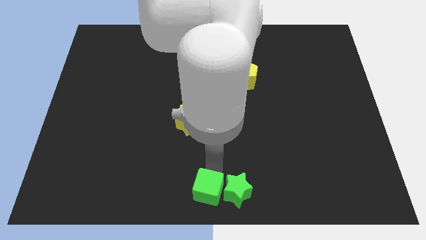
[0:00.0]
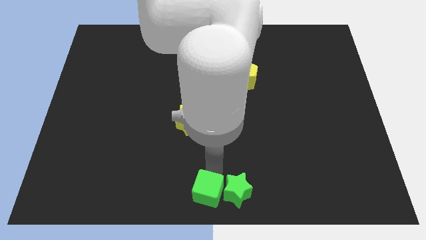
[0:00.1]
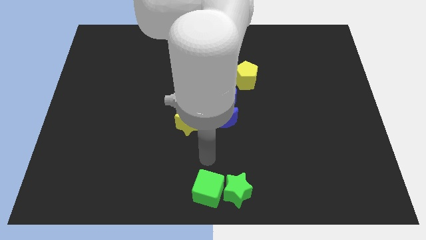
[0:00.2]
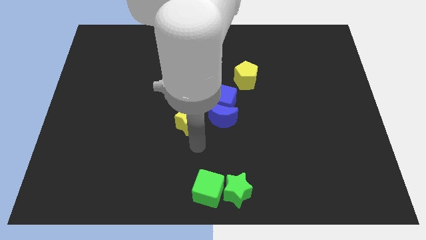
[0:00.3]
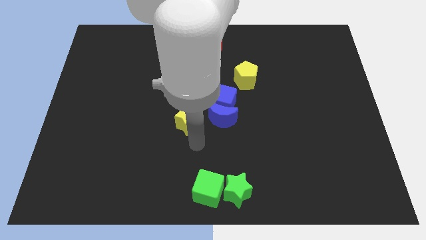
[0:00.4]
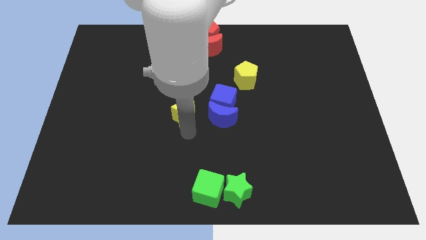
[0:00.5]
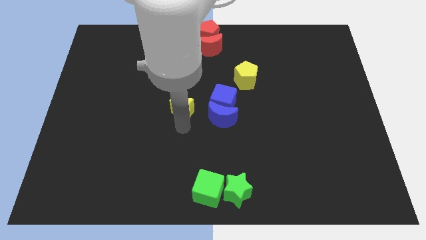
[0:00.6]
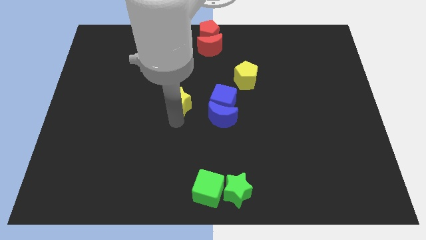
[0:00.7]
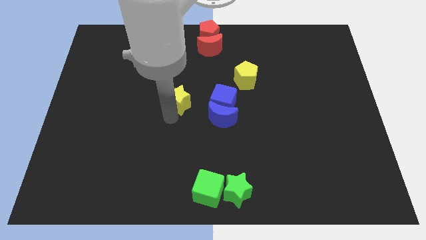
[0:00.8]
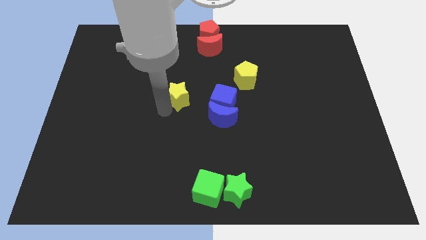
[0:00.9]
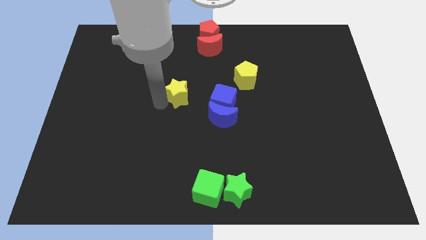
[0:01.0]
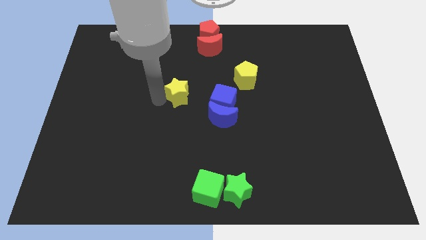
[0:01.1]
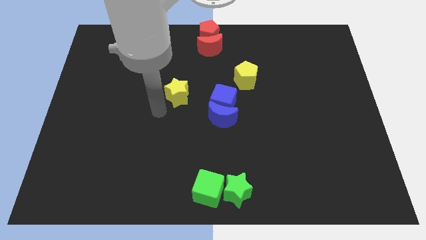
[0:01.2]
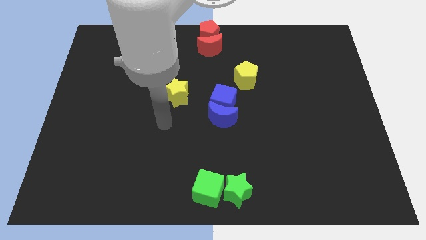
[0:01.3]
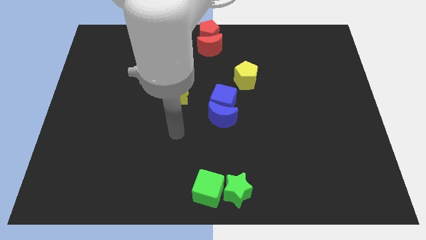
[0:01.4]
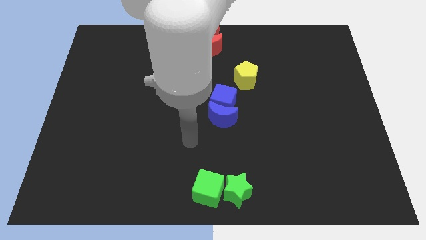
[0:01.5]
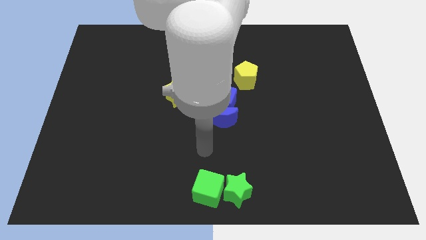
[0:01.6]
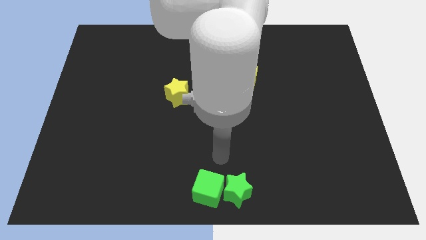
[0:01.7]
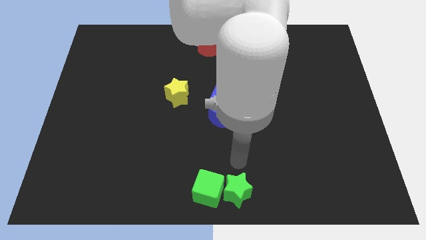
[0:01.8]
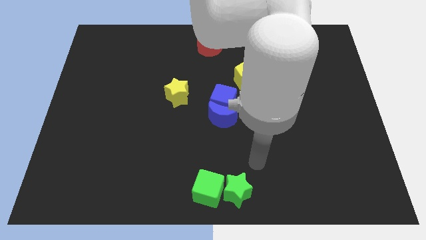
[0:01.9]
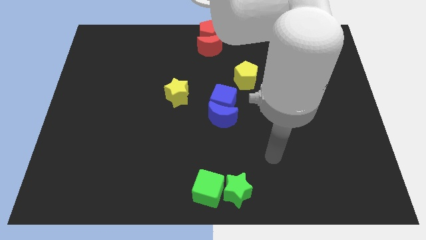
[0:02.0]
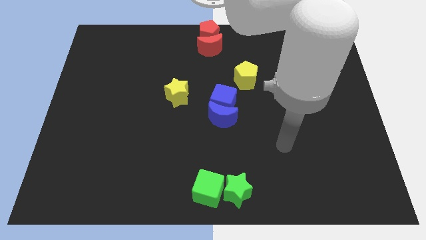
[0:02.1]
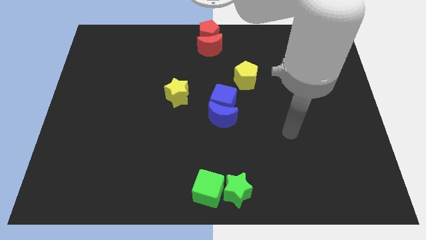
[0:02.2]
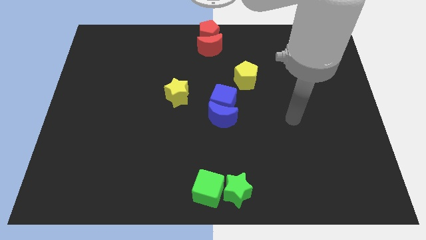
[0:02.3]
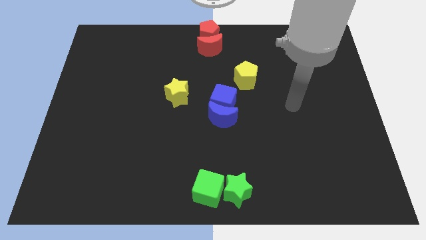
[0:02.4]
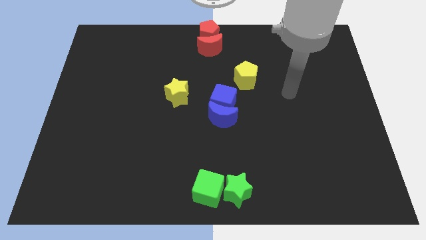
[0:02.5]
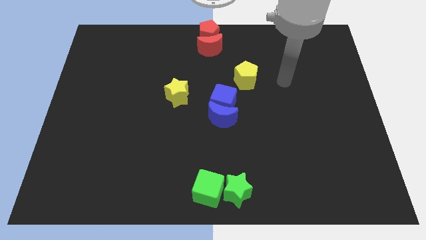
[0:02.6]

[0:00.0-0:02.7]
place the yellow star parallel to blue cube

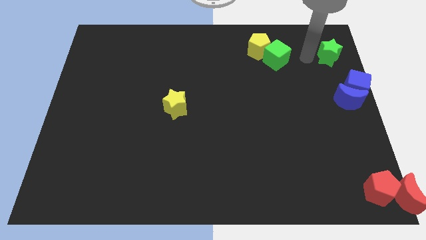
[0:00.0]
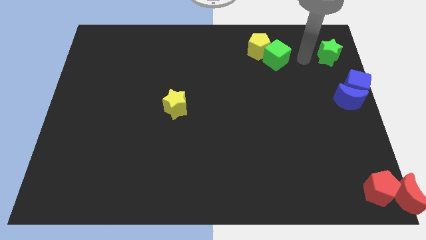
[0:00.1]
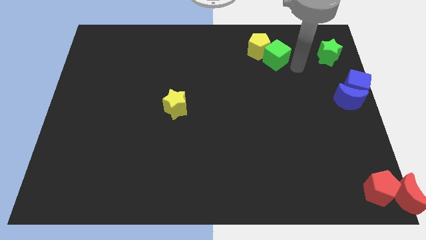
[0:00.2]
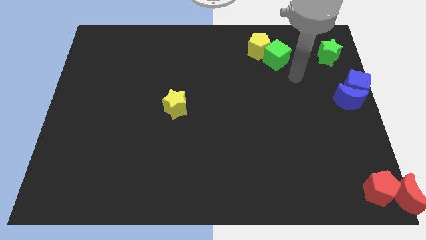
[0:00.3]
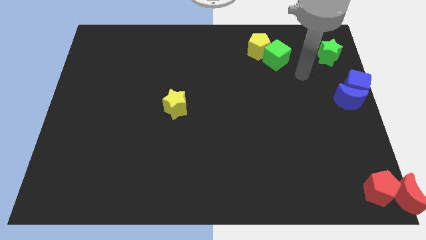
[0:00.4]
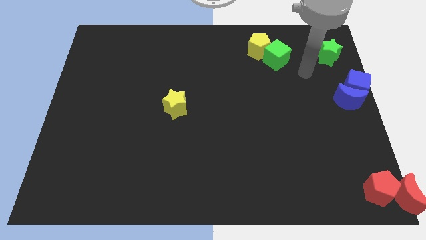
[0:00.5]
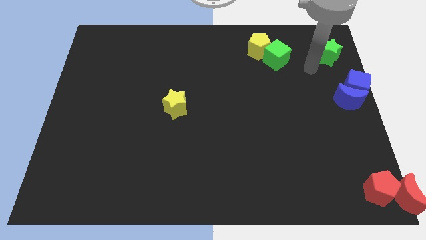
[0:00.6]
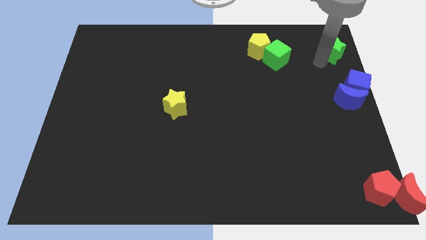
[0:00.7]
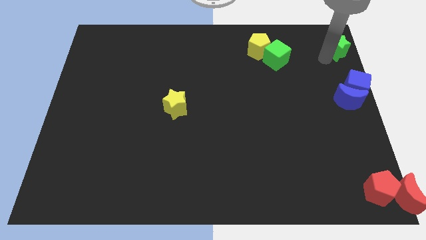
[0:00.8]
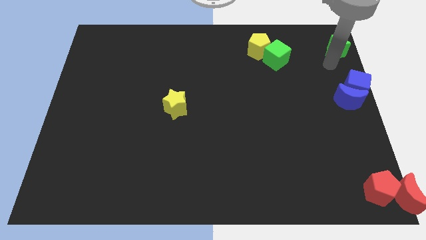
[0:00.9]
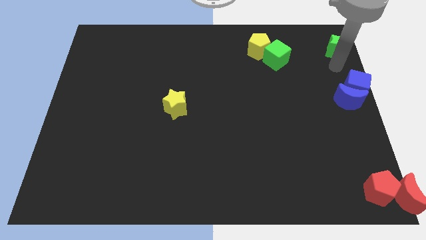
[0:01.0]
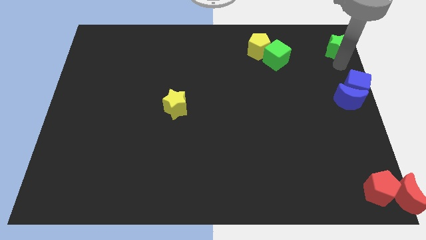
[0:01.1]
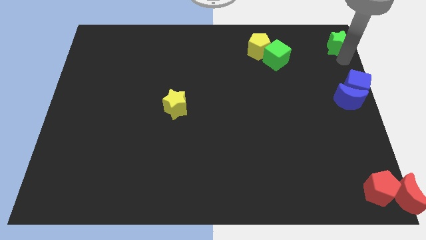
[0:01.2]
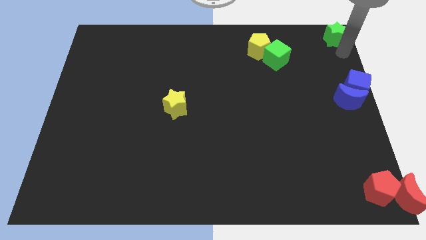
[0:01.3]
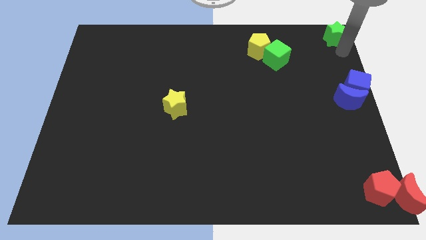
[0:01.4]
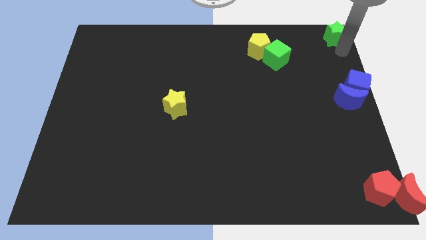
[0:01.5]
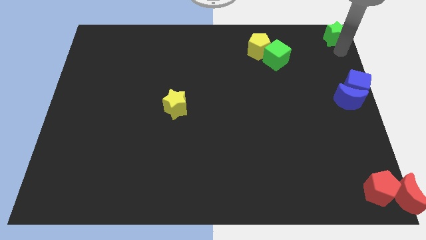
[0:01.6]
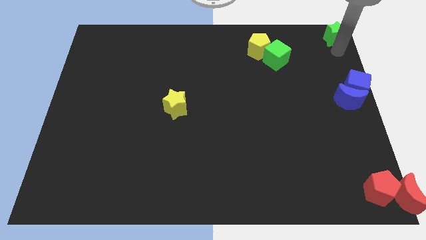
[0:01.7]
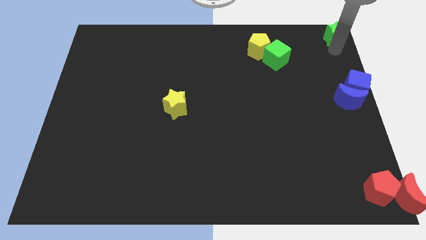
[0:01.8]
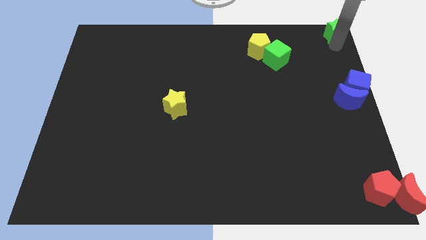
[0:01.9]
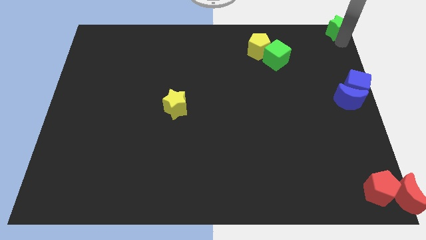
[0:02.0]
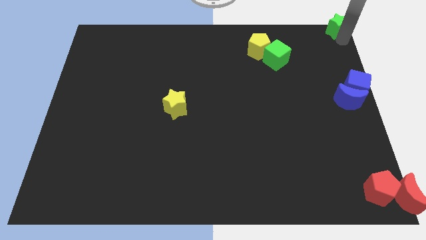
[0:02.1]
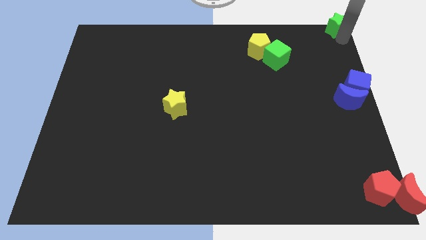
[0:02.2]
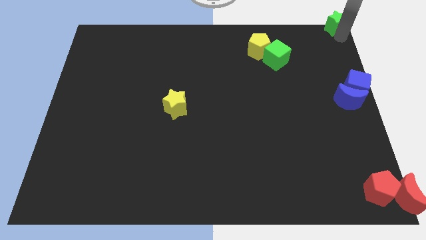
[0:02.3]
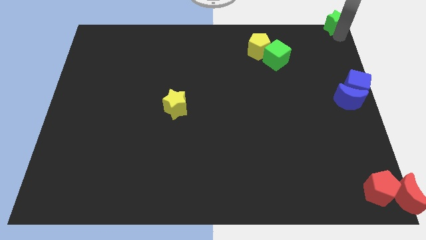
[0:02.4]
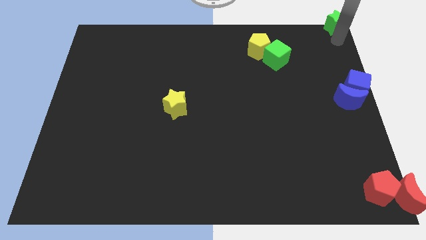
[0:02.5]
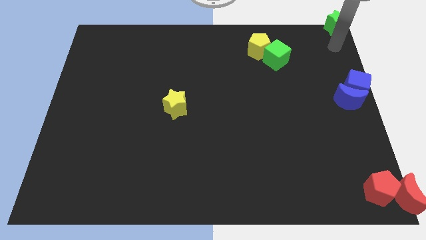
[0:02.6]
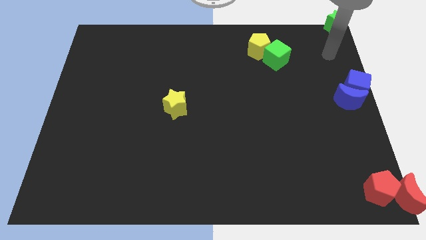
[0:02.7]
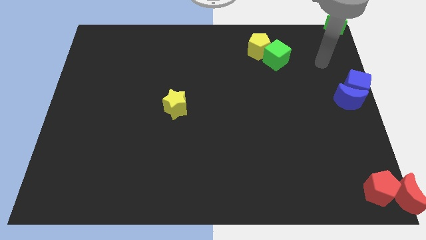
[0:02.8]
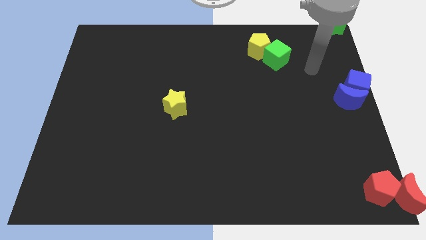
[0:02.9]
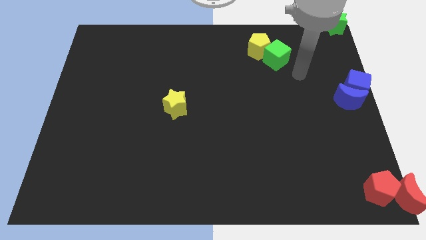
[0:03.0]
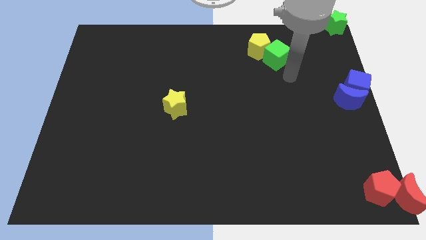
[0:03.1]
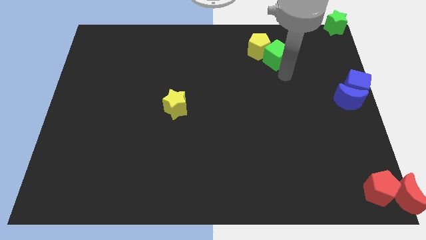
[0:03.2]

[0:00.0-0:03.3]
move your arm away from the green star

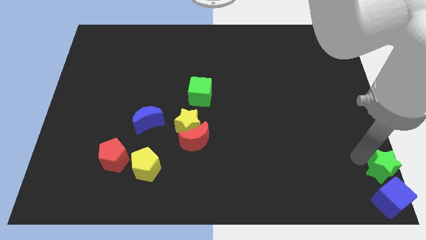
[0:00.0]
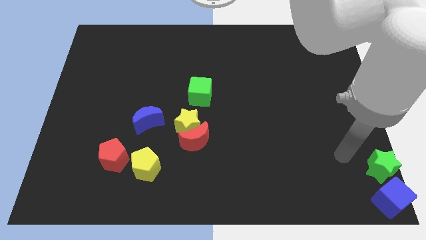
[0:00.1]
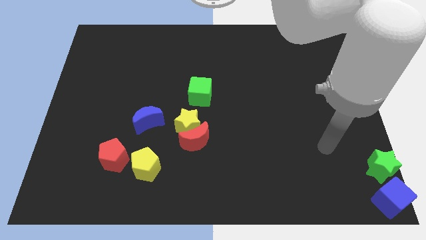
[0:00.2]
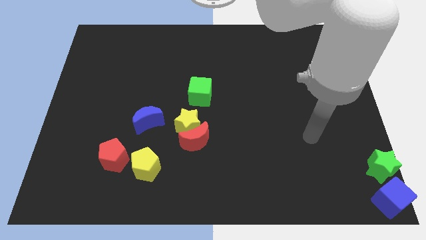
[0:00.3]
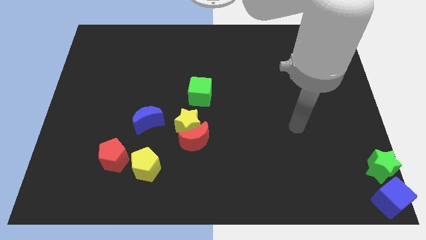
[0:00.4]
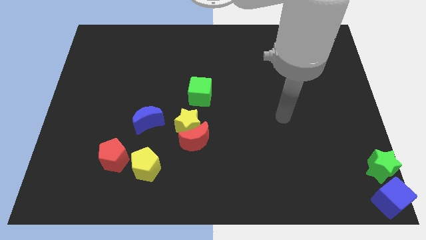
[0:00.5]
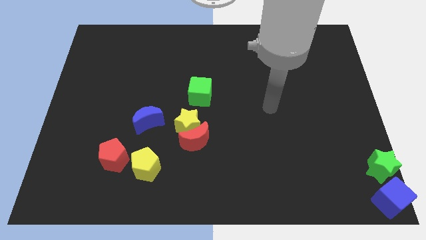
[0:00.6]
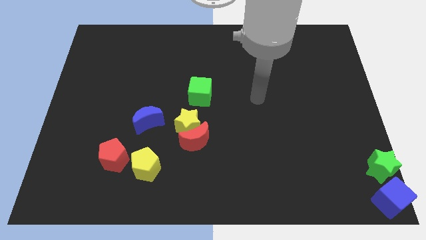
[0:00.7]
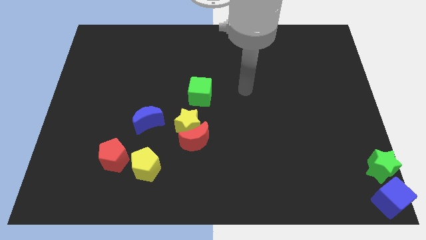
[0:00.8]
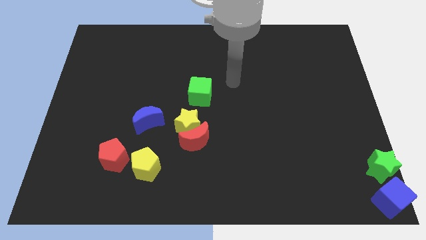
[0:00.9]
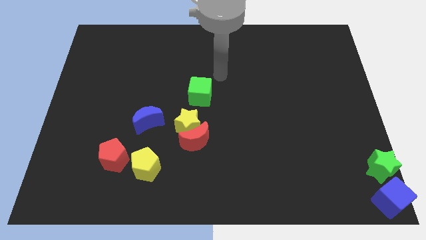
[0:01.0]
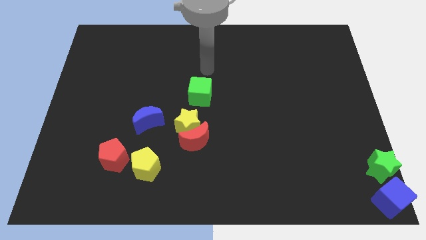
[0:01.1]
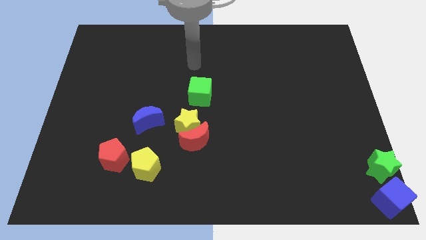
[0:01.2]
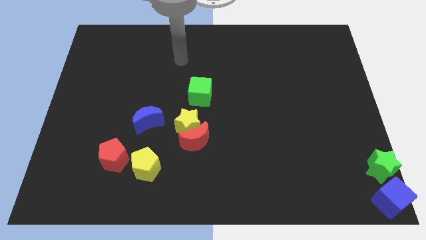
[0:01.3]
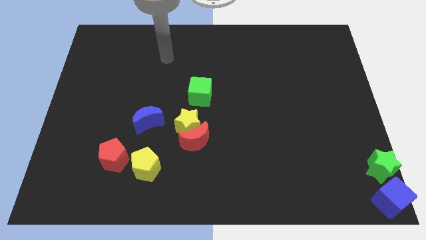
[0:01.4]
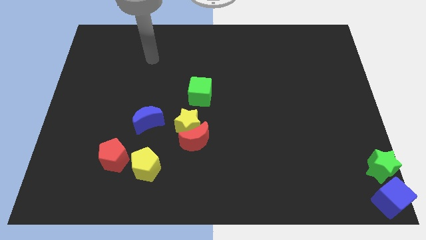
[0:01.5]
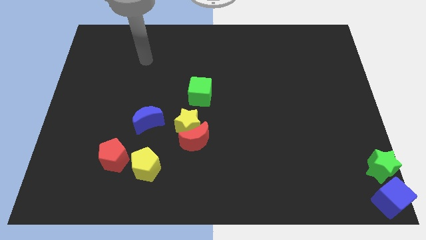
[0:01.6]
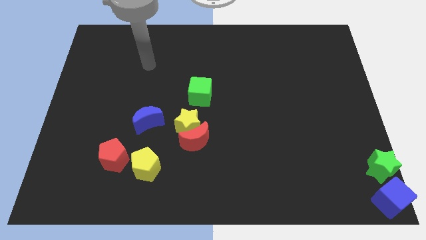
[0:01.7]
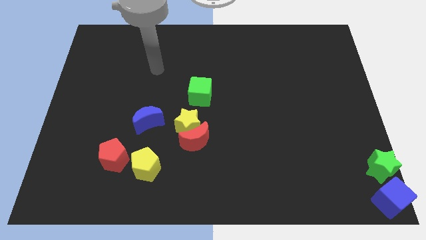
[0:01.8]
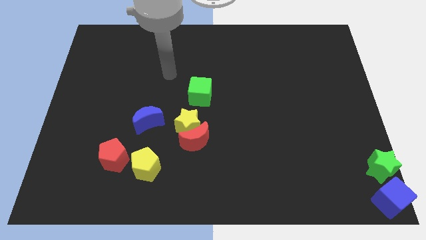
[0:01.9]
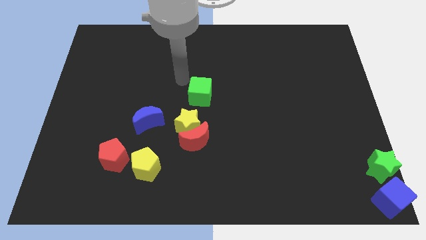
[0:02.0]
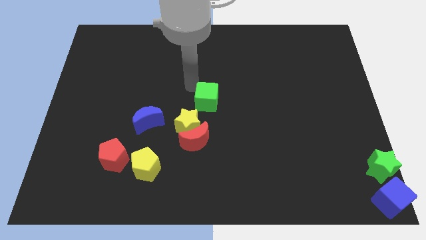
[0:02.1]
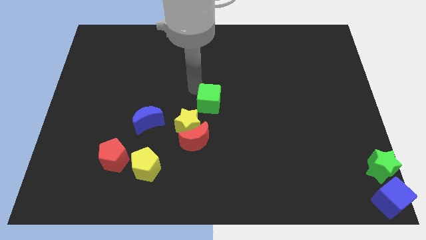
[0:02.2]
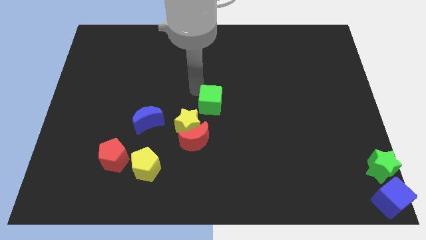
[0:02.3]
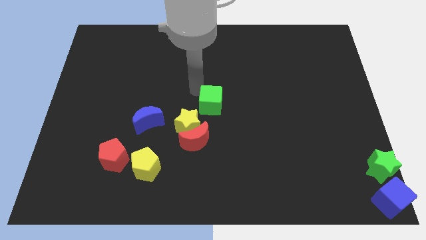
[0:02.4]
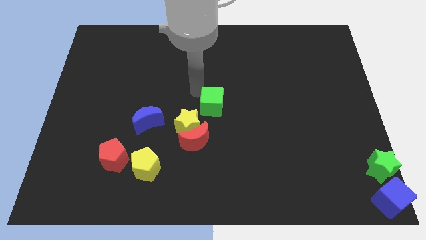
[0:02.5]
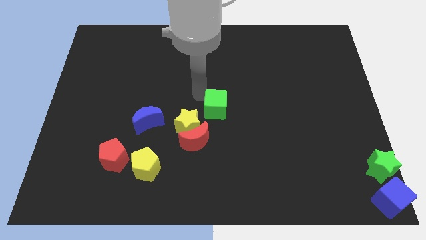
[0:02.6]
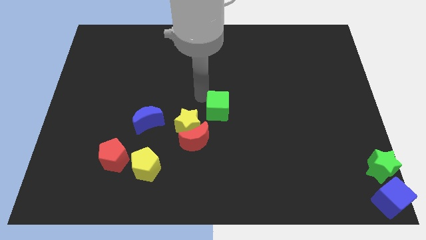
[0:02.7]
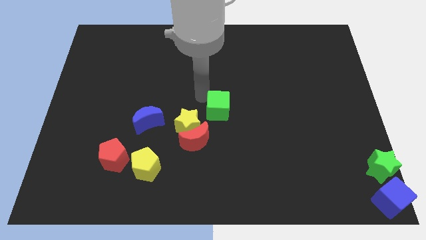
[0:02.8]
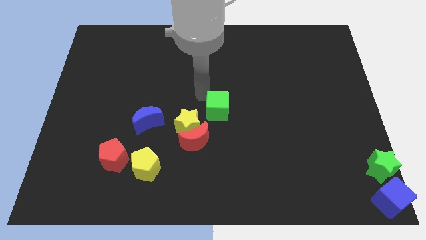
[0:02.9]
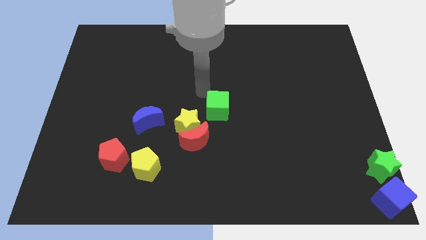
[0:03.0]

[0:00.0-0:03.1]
put the green cube at the top right of the yellow star
